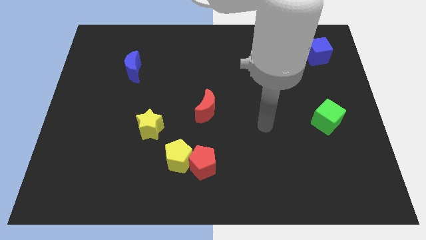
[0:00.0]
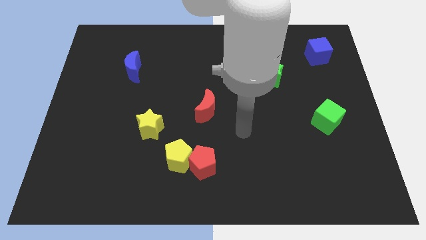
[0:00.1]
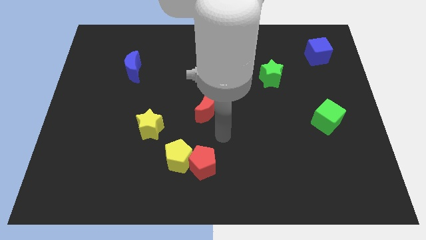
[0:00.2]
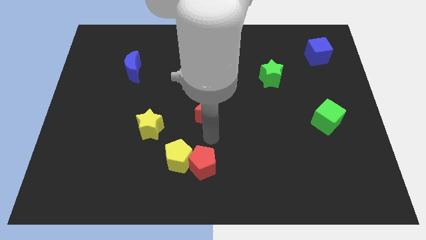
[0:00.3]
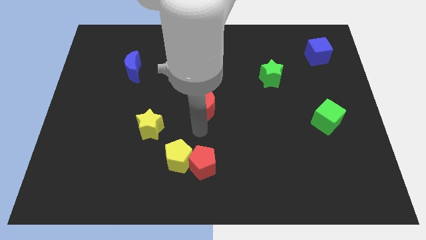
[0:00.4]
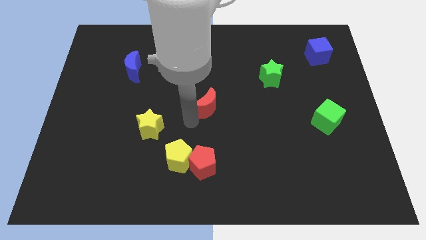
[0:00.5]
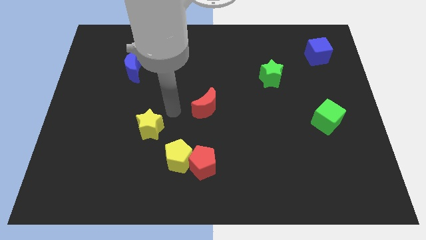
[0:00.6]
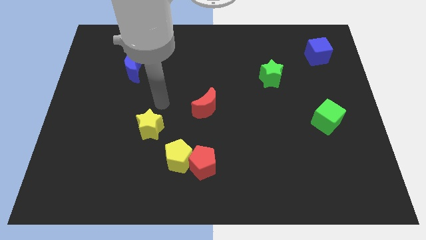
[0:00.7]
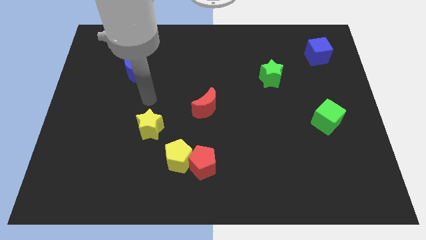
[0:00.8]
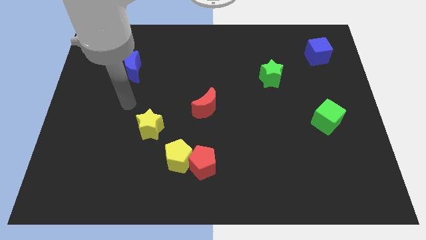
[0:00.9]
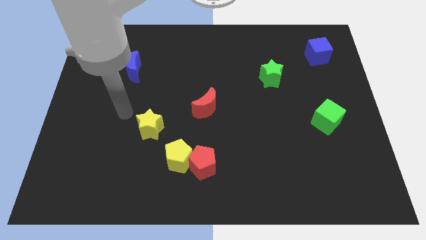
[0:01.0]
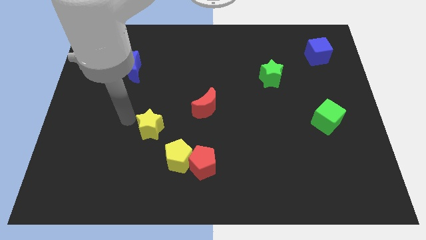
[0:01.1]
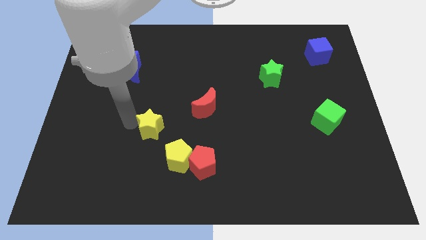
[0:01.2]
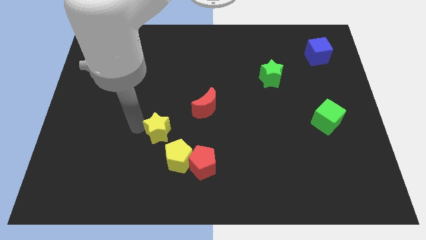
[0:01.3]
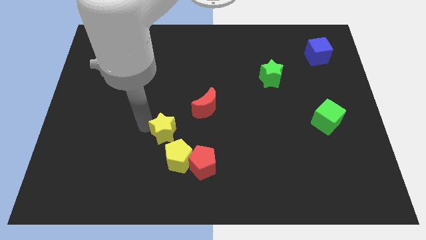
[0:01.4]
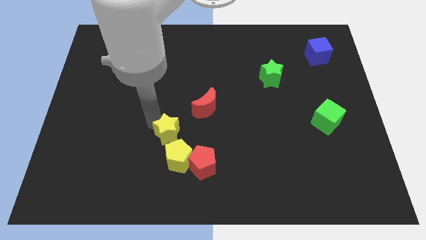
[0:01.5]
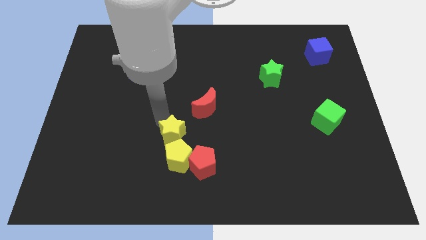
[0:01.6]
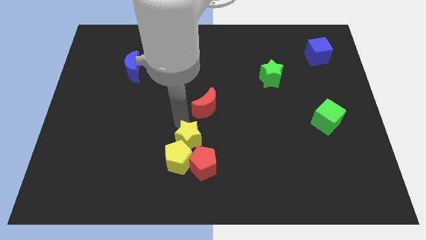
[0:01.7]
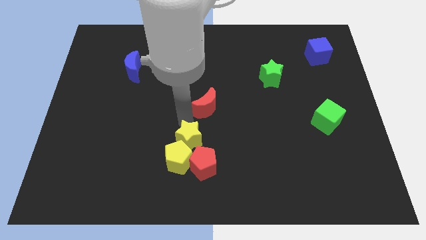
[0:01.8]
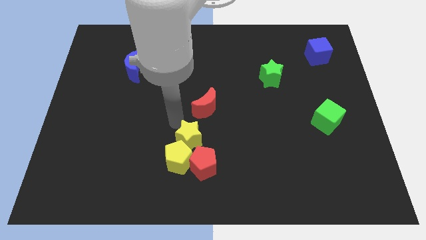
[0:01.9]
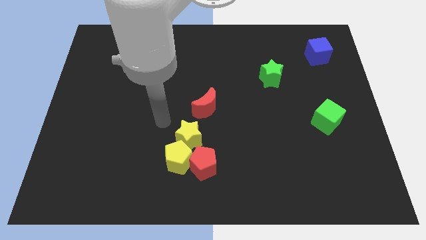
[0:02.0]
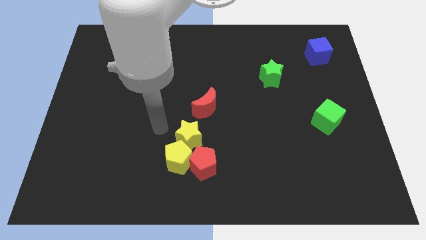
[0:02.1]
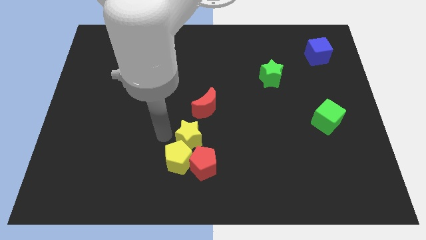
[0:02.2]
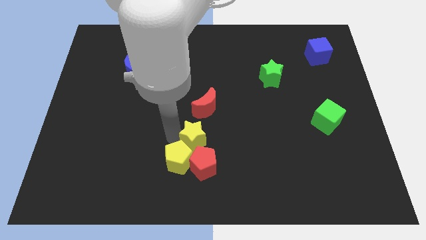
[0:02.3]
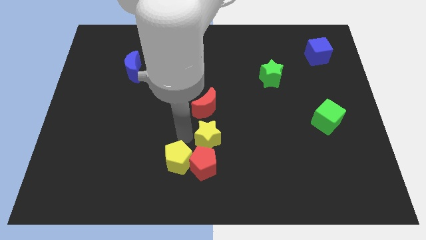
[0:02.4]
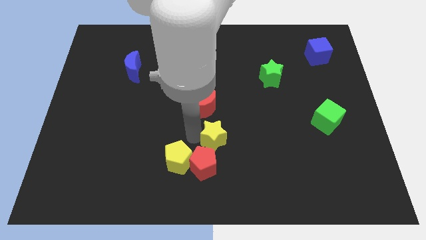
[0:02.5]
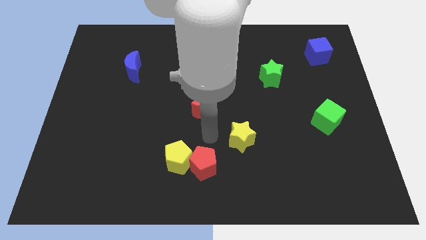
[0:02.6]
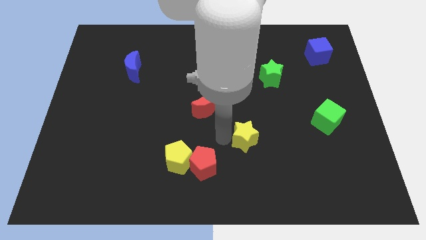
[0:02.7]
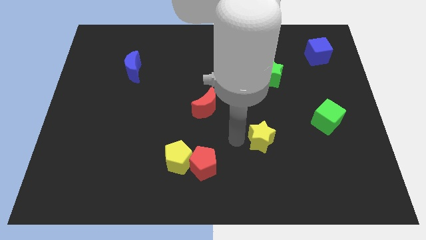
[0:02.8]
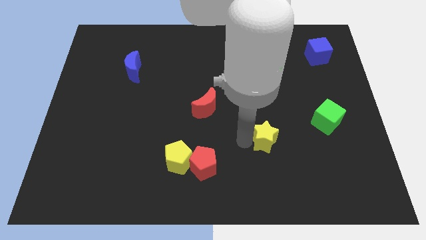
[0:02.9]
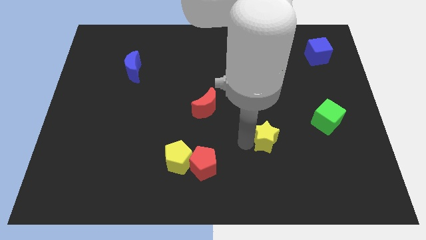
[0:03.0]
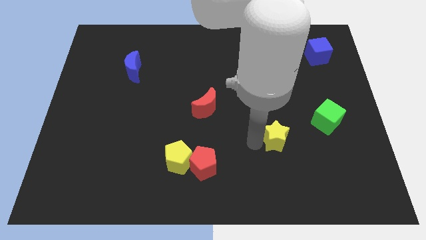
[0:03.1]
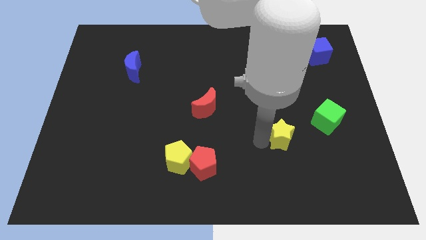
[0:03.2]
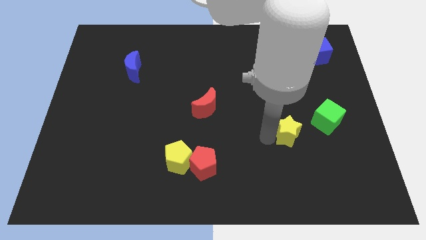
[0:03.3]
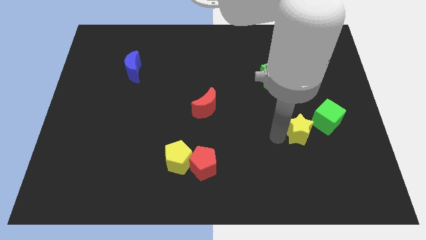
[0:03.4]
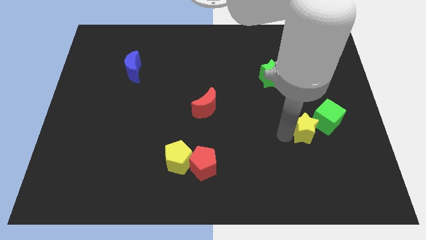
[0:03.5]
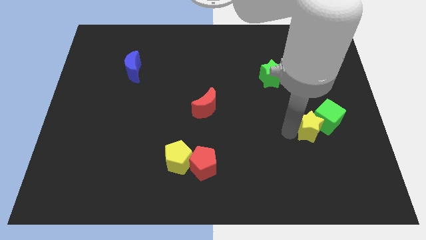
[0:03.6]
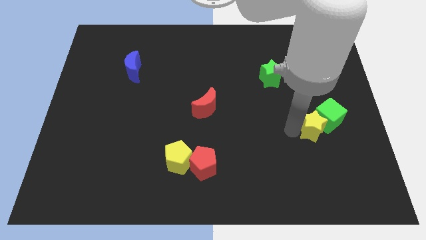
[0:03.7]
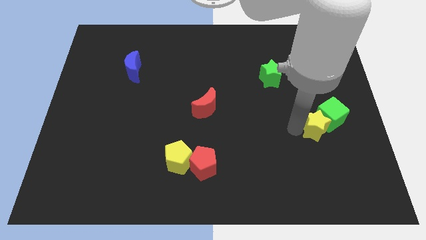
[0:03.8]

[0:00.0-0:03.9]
push the yellow star close to the green cube

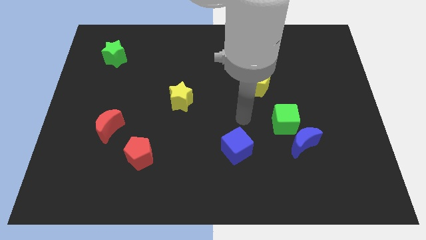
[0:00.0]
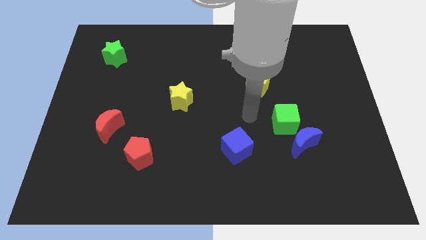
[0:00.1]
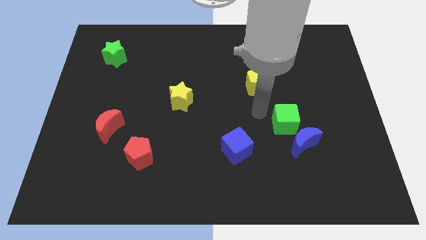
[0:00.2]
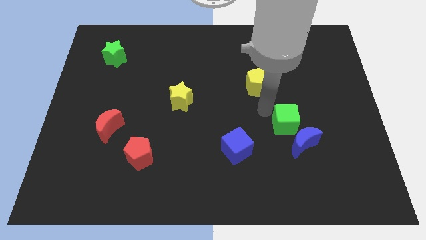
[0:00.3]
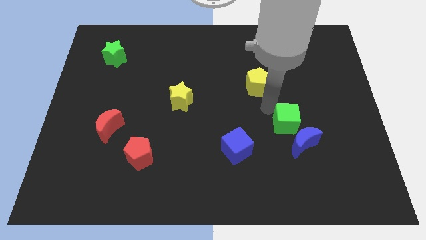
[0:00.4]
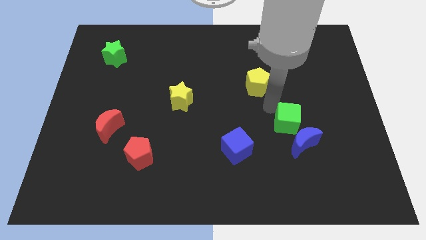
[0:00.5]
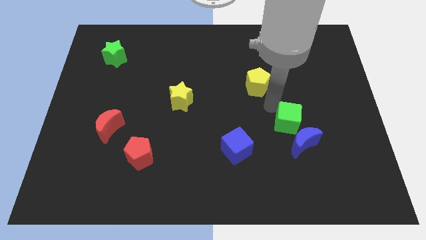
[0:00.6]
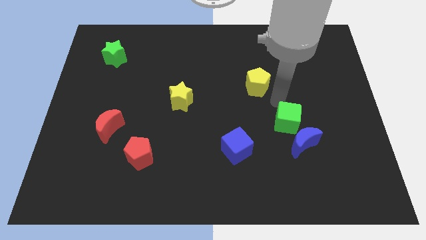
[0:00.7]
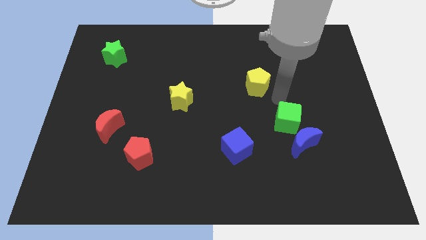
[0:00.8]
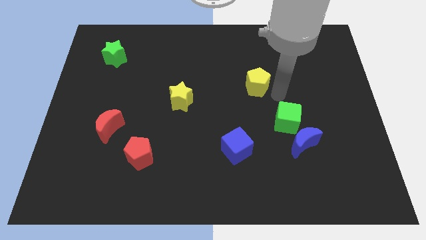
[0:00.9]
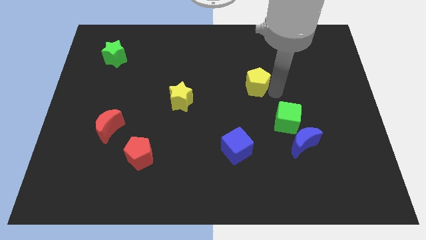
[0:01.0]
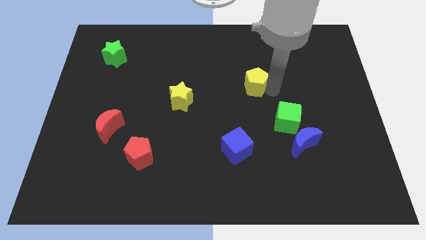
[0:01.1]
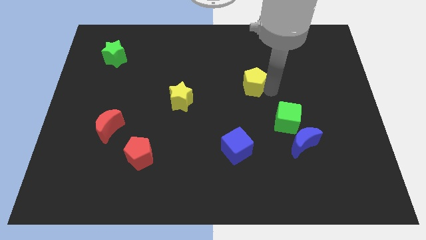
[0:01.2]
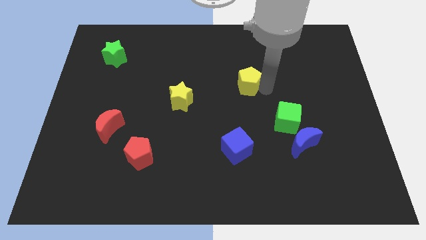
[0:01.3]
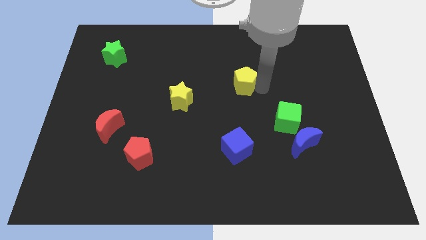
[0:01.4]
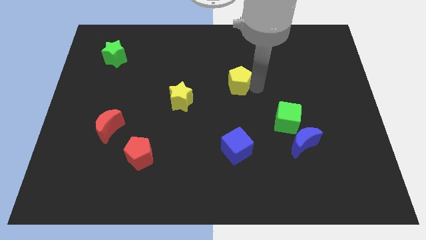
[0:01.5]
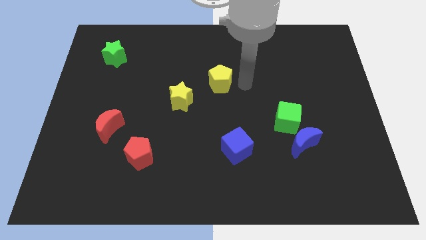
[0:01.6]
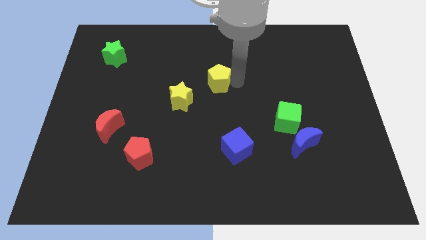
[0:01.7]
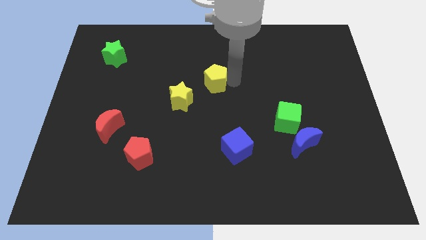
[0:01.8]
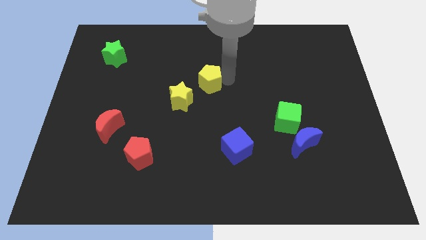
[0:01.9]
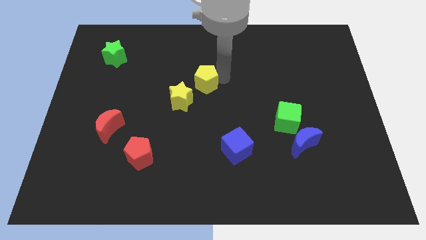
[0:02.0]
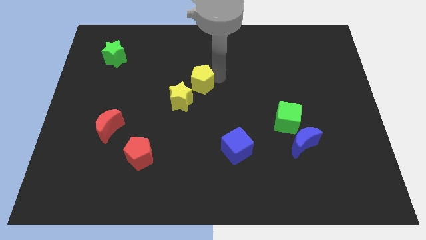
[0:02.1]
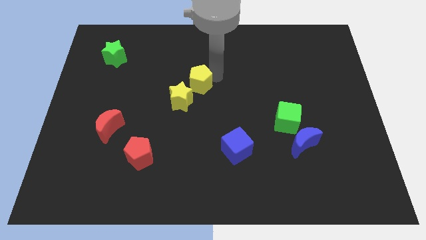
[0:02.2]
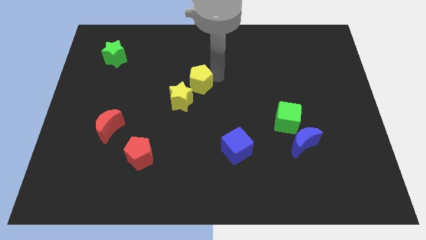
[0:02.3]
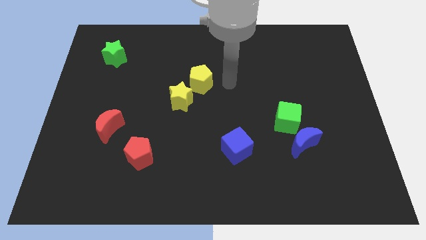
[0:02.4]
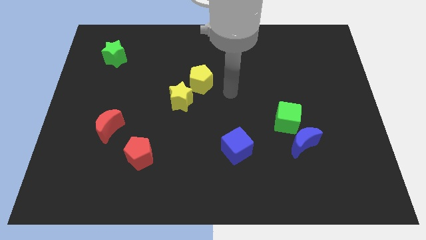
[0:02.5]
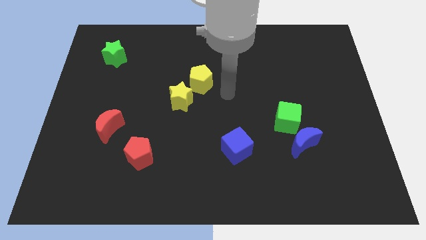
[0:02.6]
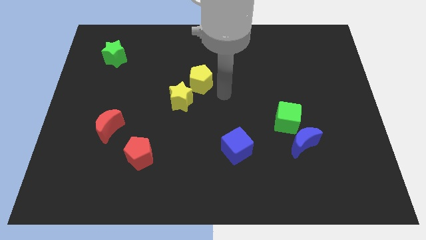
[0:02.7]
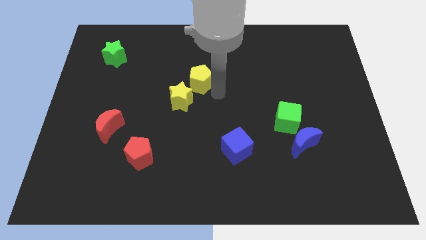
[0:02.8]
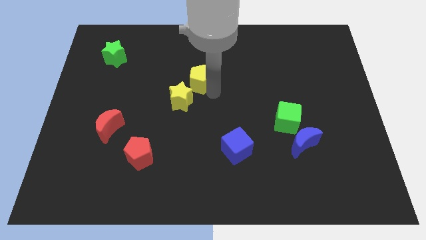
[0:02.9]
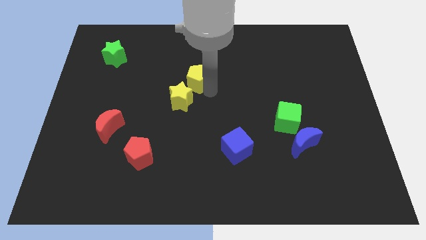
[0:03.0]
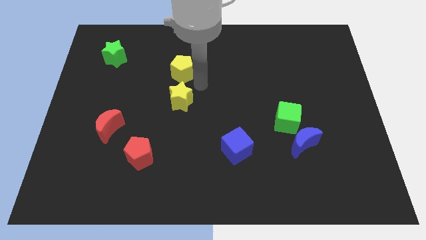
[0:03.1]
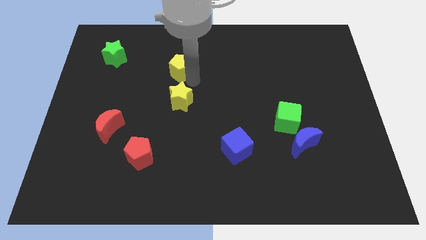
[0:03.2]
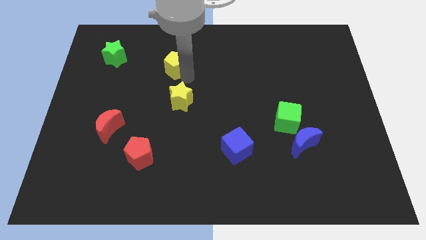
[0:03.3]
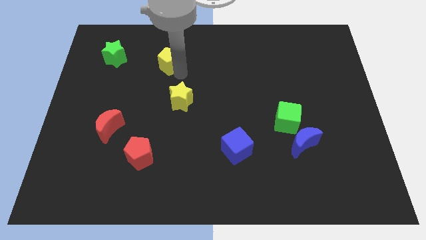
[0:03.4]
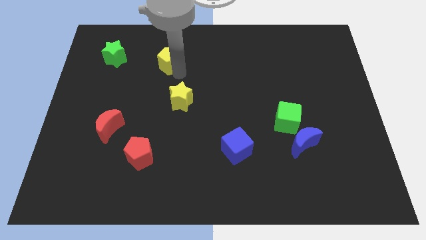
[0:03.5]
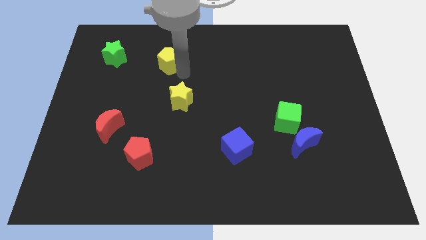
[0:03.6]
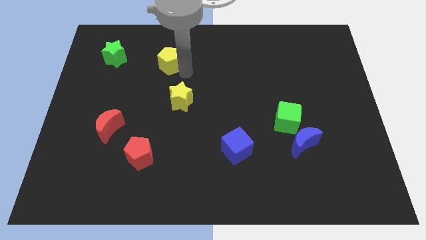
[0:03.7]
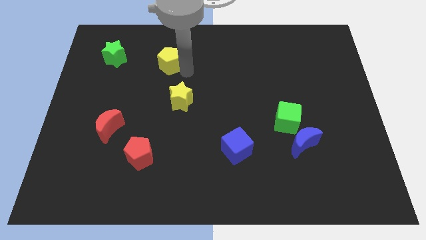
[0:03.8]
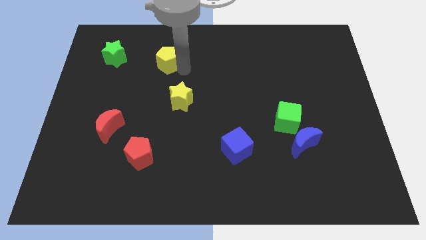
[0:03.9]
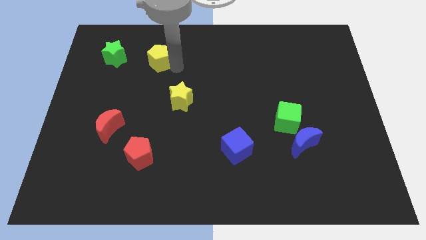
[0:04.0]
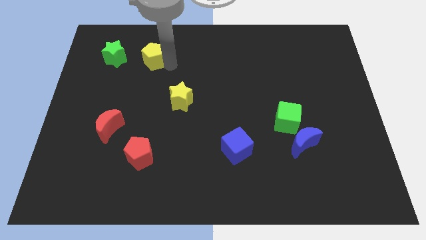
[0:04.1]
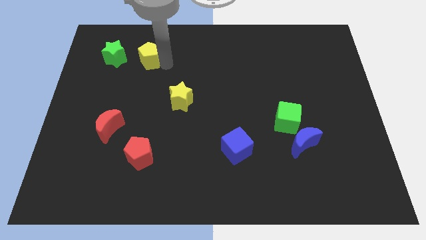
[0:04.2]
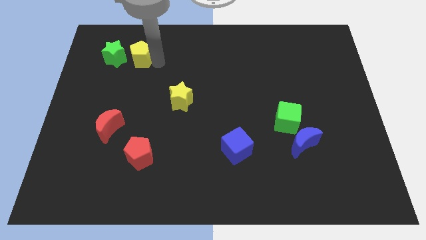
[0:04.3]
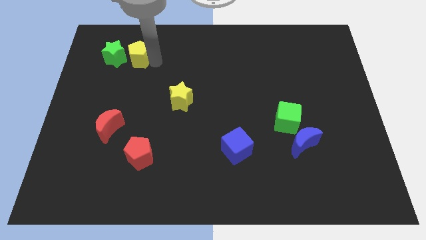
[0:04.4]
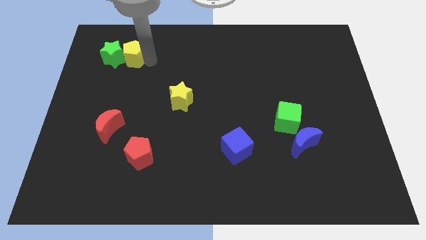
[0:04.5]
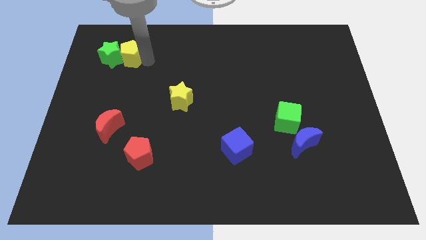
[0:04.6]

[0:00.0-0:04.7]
slide the yellow pentagon close to the green star

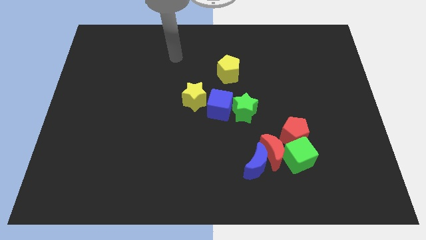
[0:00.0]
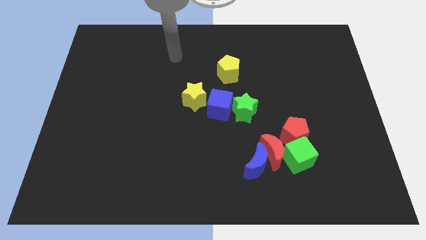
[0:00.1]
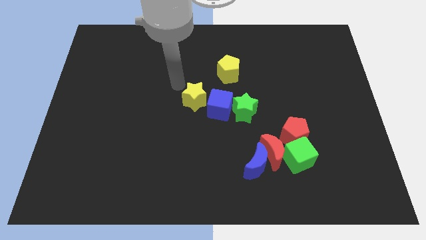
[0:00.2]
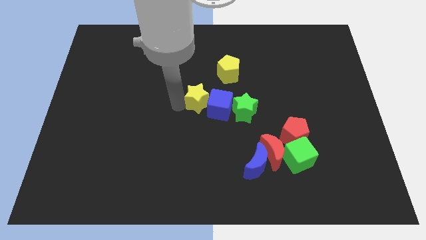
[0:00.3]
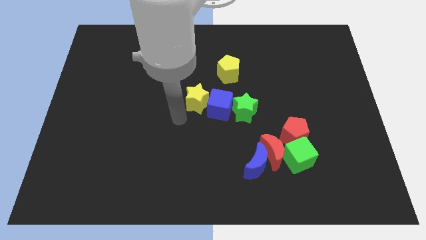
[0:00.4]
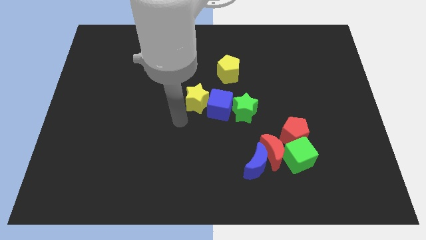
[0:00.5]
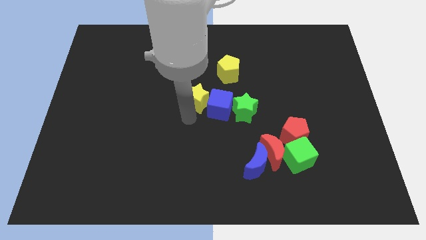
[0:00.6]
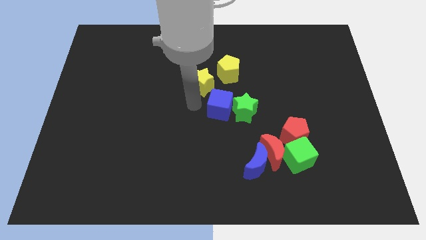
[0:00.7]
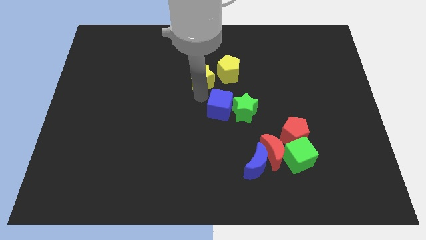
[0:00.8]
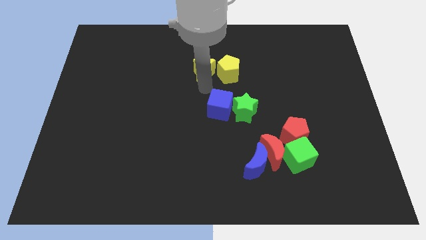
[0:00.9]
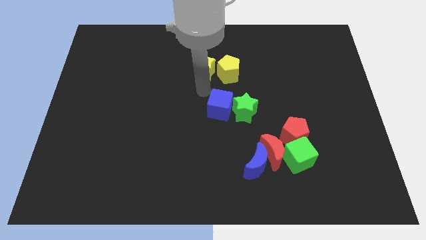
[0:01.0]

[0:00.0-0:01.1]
push the yellow star to the yellow pentagon
